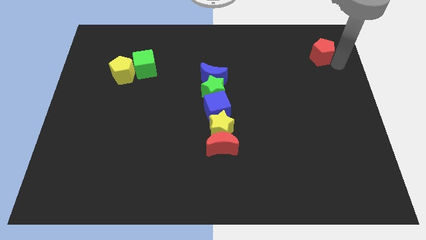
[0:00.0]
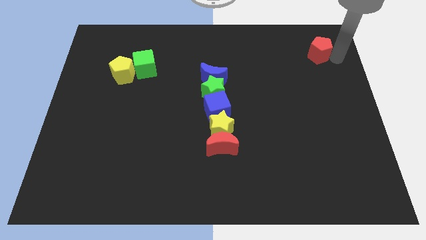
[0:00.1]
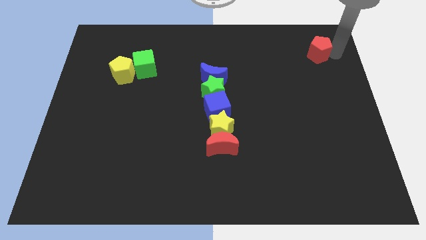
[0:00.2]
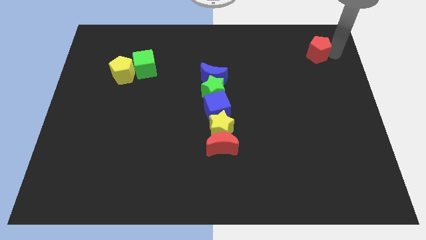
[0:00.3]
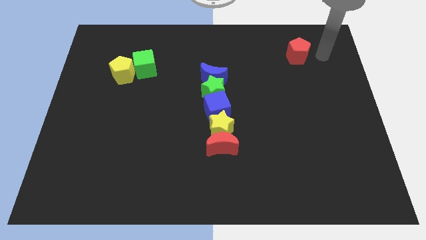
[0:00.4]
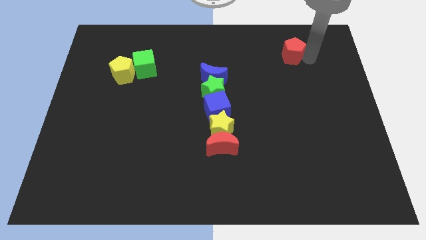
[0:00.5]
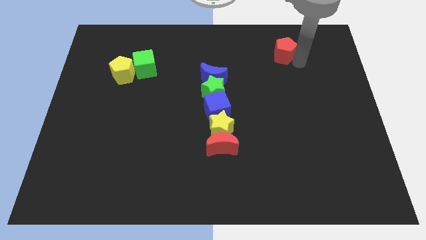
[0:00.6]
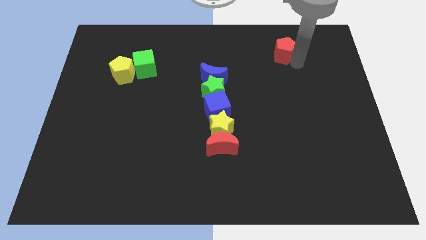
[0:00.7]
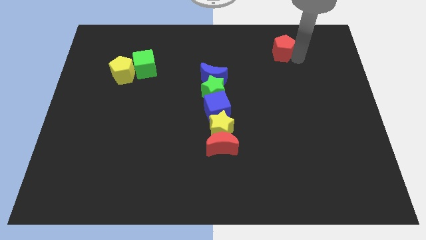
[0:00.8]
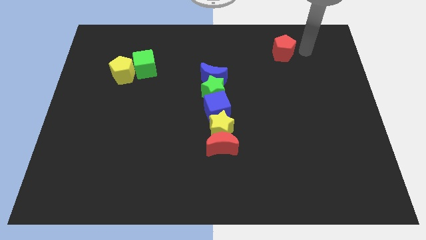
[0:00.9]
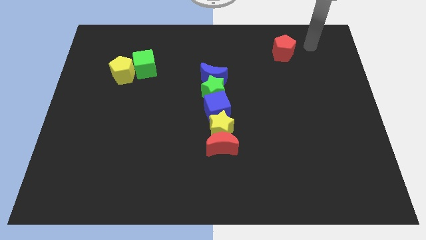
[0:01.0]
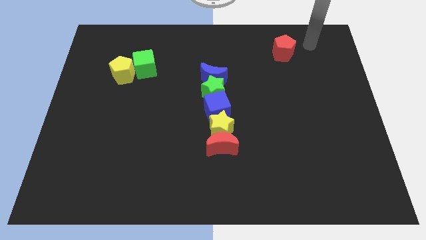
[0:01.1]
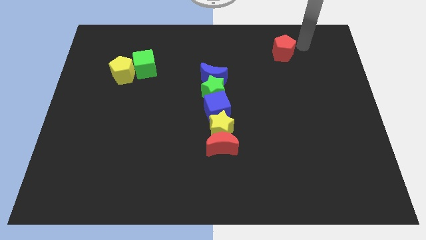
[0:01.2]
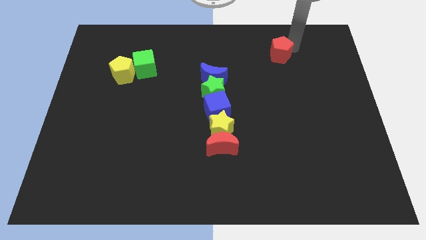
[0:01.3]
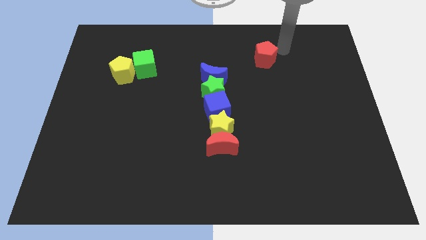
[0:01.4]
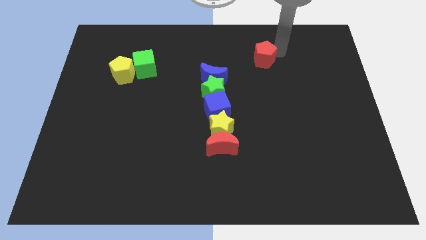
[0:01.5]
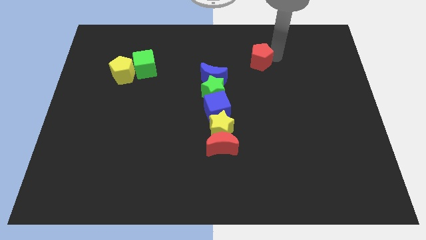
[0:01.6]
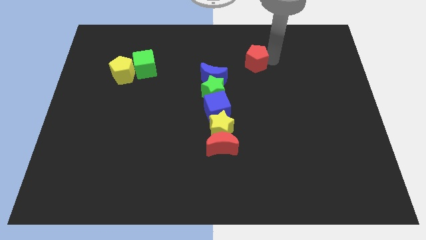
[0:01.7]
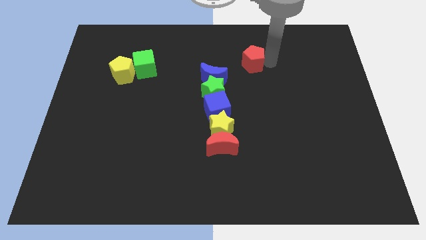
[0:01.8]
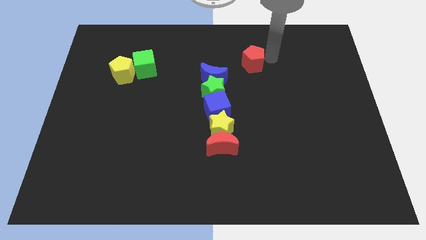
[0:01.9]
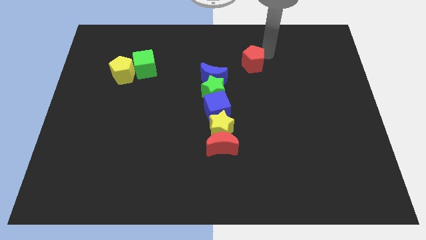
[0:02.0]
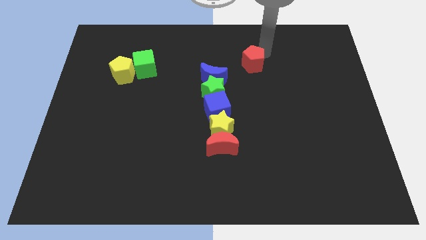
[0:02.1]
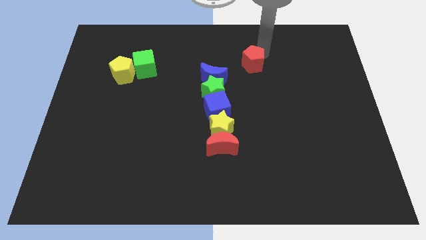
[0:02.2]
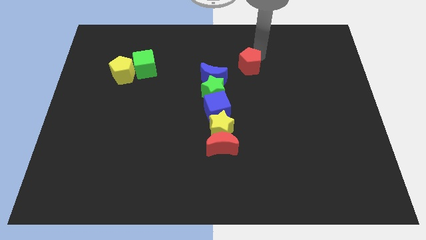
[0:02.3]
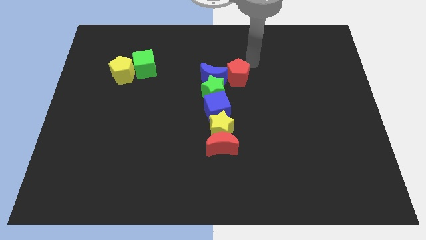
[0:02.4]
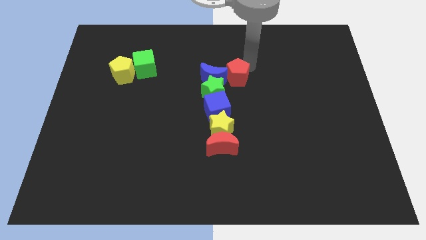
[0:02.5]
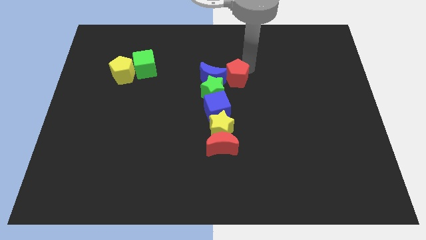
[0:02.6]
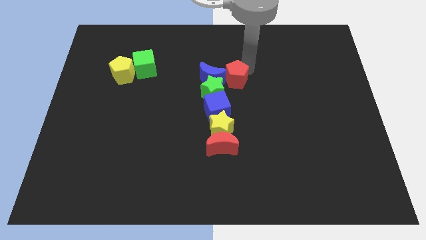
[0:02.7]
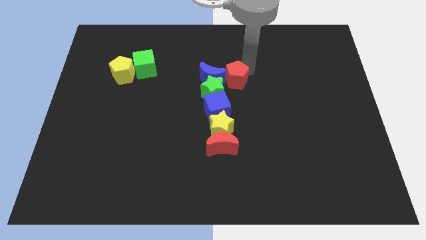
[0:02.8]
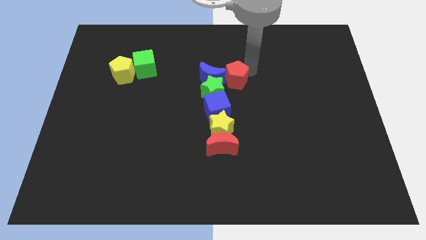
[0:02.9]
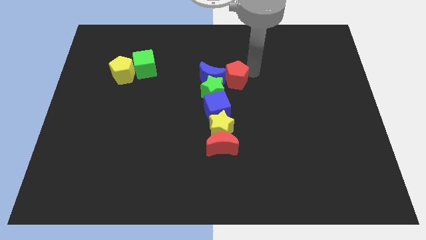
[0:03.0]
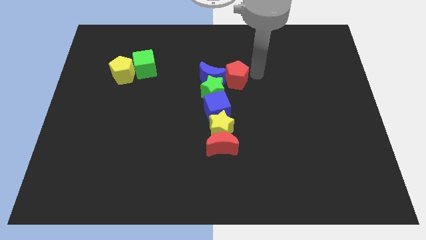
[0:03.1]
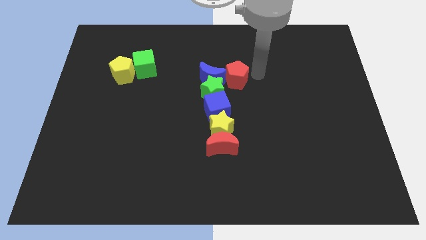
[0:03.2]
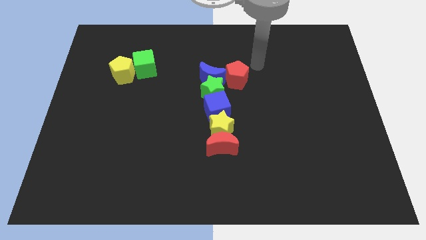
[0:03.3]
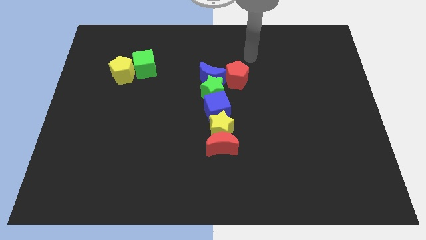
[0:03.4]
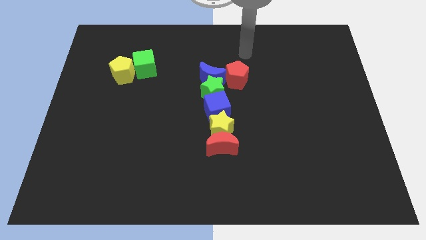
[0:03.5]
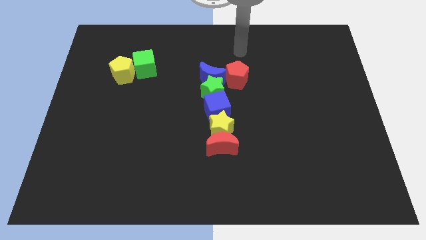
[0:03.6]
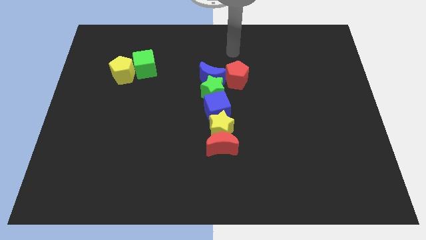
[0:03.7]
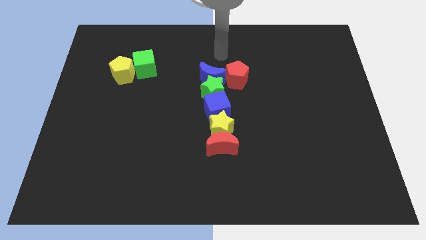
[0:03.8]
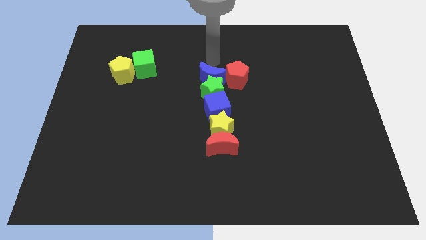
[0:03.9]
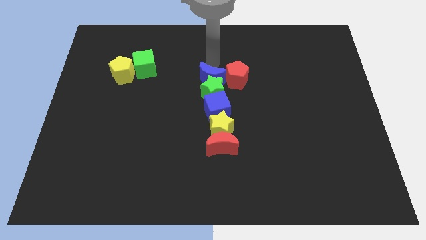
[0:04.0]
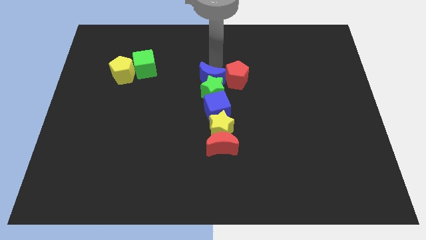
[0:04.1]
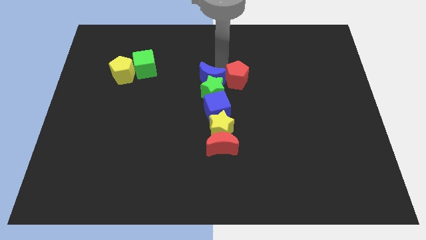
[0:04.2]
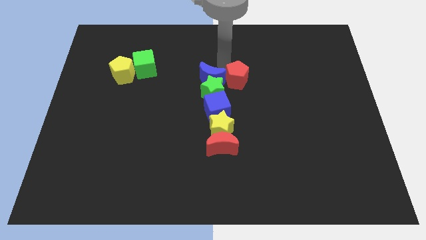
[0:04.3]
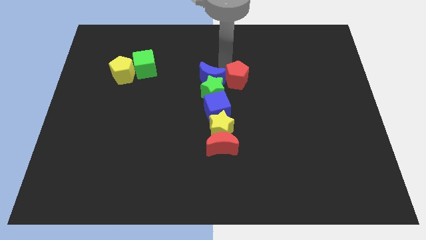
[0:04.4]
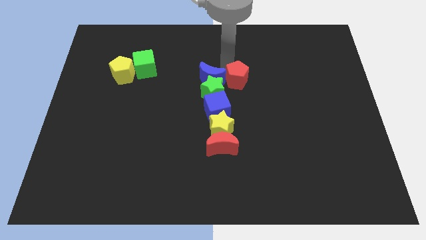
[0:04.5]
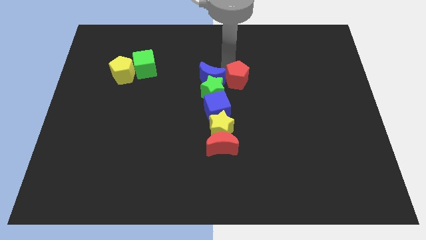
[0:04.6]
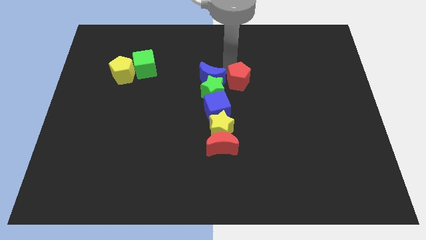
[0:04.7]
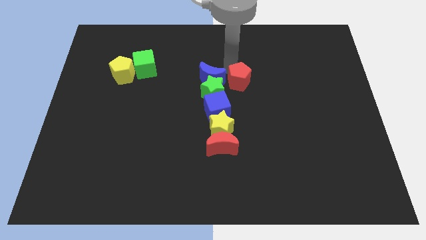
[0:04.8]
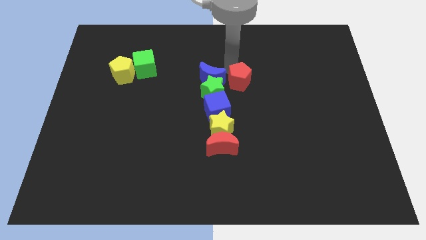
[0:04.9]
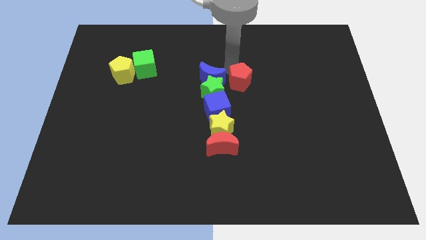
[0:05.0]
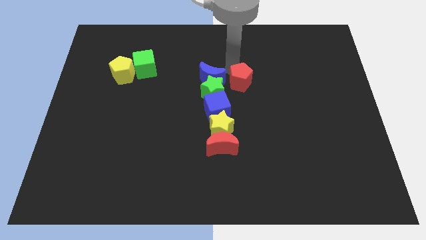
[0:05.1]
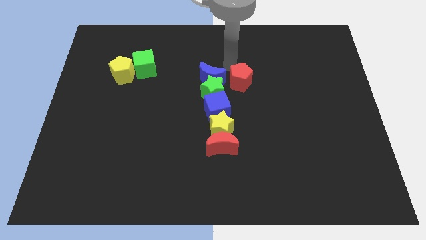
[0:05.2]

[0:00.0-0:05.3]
push the red pentagon to the right of the blue crescent

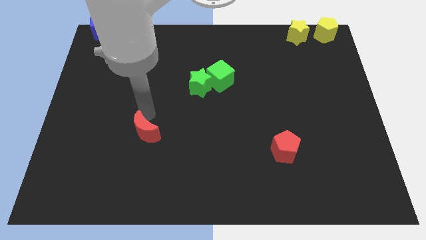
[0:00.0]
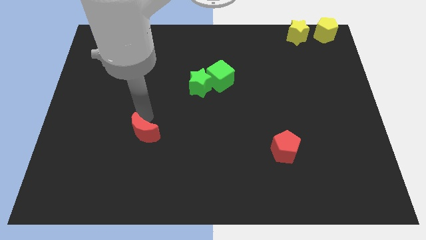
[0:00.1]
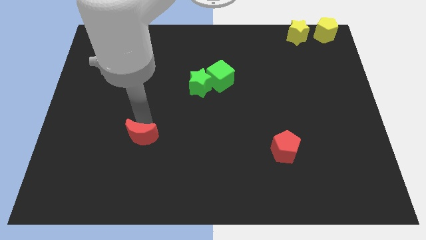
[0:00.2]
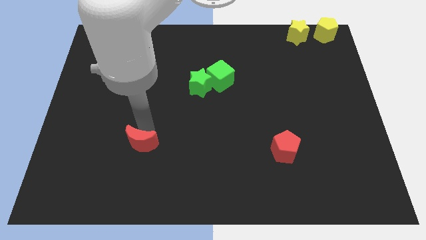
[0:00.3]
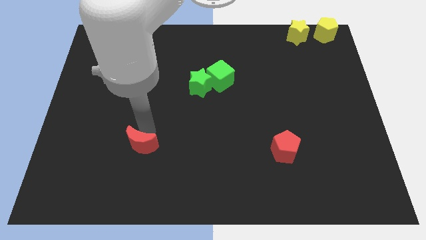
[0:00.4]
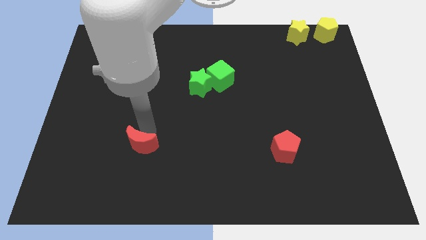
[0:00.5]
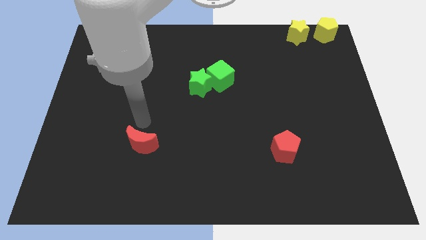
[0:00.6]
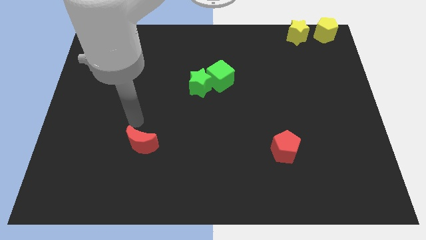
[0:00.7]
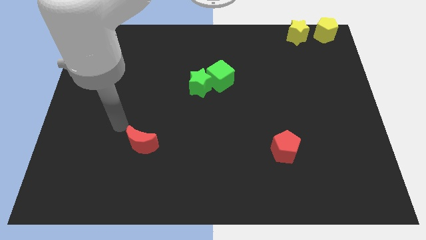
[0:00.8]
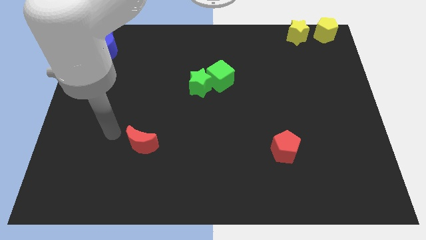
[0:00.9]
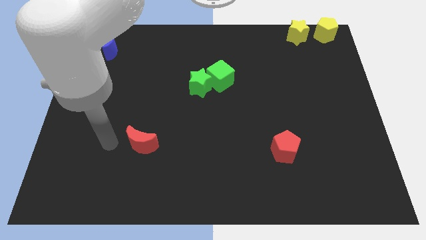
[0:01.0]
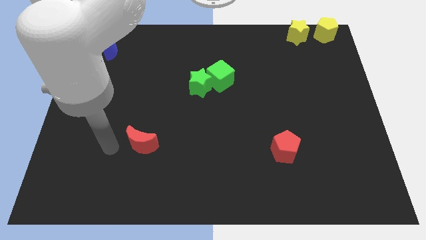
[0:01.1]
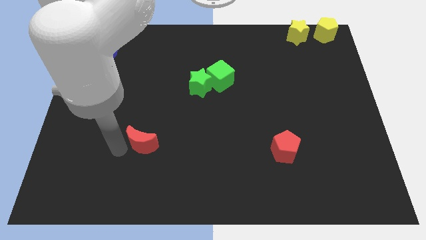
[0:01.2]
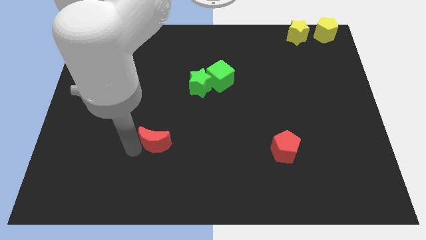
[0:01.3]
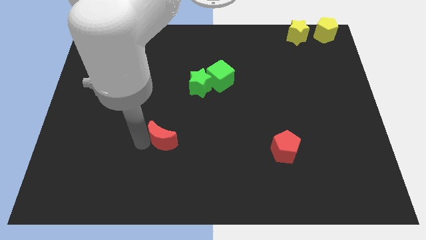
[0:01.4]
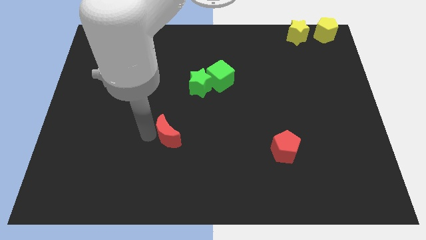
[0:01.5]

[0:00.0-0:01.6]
push the red half moon towards the red pentagan

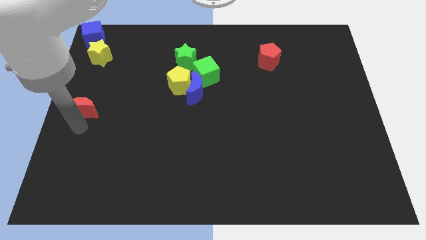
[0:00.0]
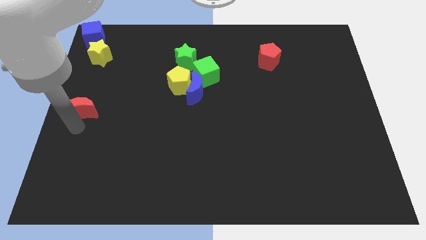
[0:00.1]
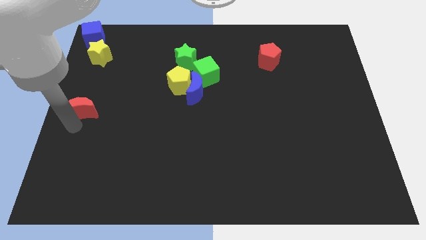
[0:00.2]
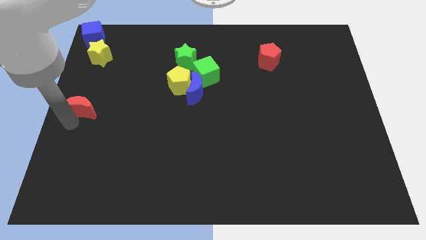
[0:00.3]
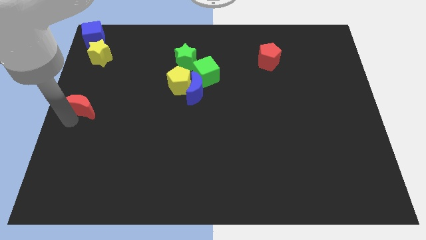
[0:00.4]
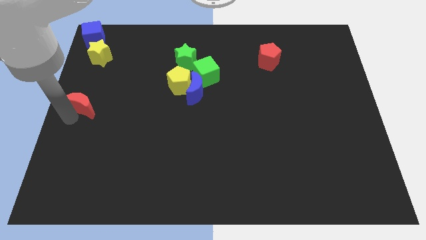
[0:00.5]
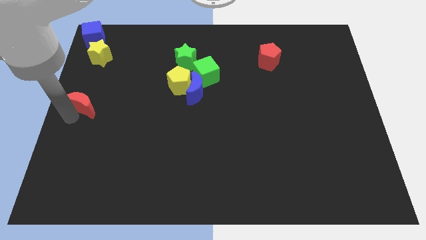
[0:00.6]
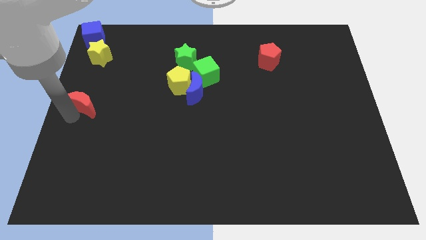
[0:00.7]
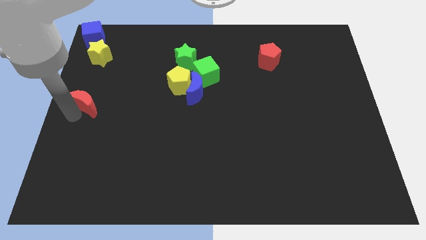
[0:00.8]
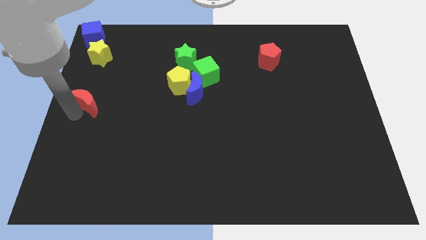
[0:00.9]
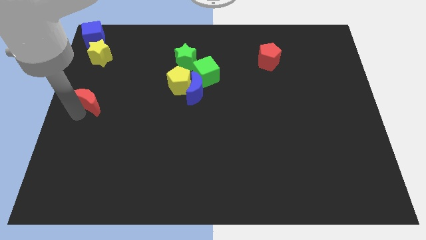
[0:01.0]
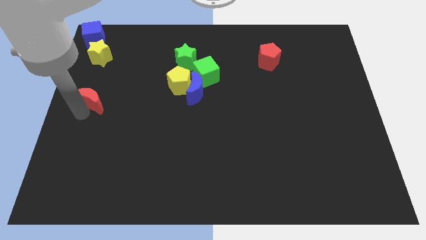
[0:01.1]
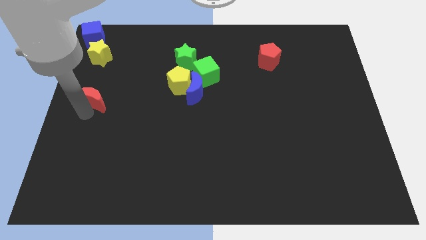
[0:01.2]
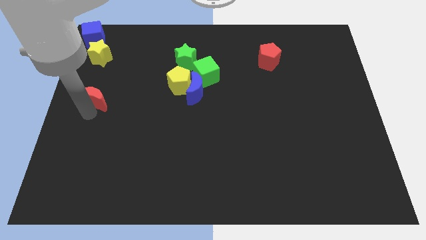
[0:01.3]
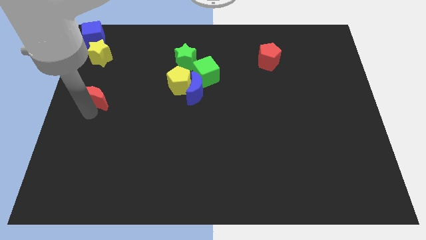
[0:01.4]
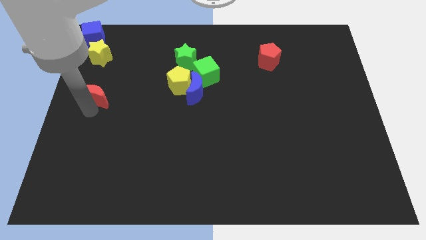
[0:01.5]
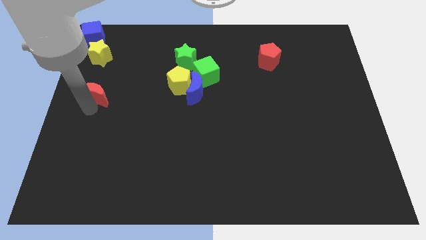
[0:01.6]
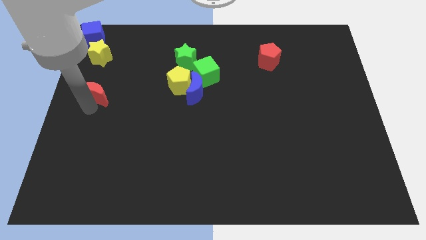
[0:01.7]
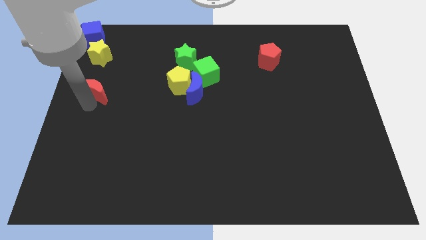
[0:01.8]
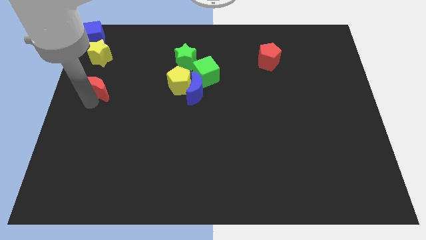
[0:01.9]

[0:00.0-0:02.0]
slide the red crescent towards the bottom side of the yellow star
